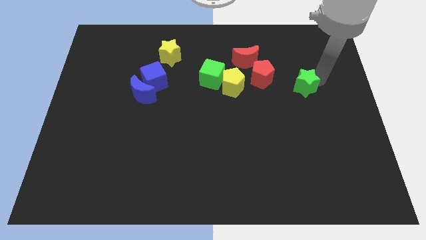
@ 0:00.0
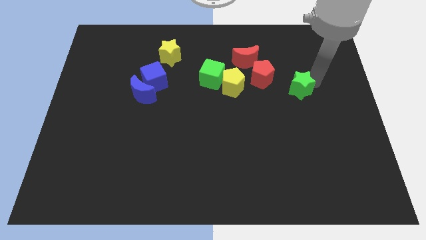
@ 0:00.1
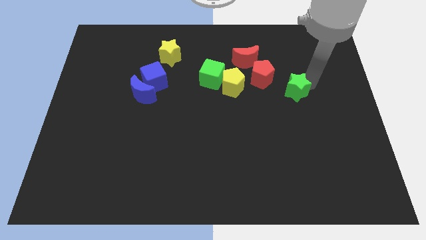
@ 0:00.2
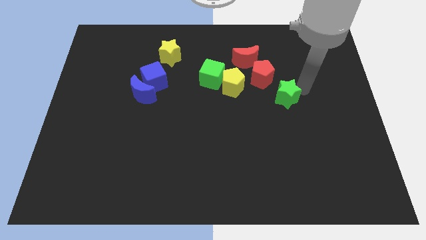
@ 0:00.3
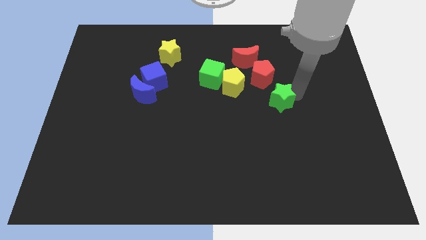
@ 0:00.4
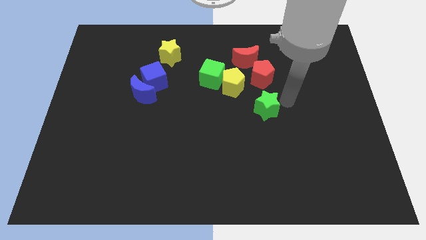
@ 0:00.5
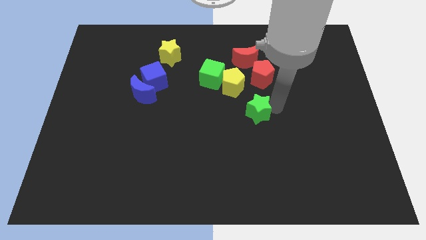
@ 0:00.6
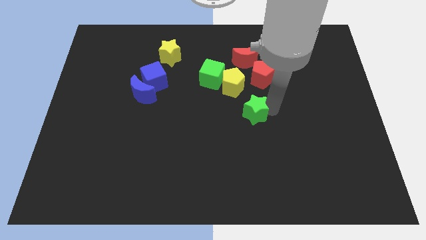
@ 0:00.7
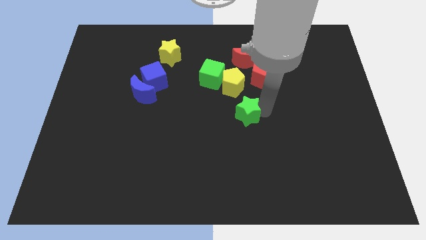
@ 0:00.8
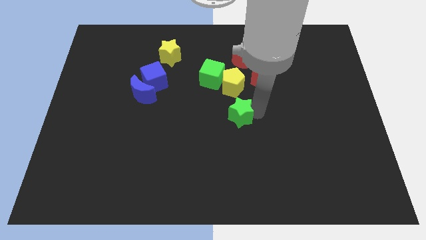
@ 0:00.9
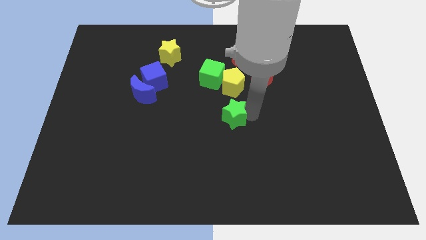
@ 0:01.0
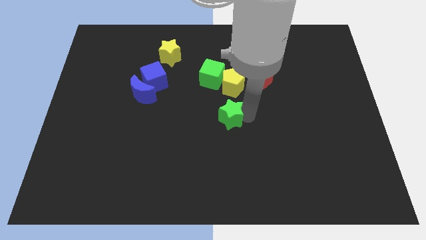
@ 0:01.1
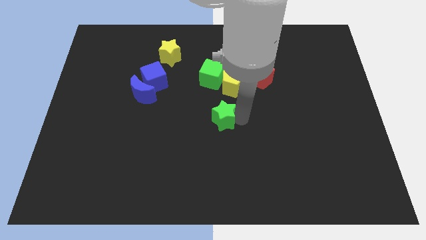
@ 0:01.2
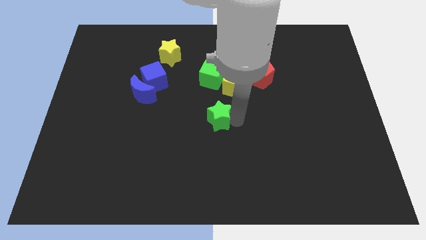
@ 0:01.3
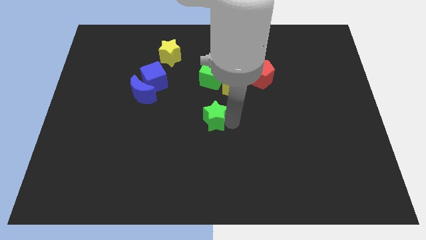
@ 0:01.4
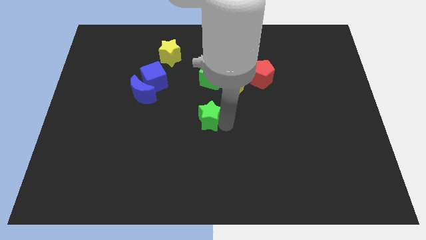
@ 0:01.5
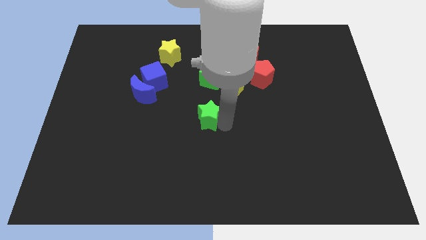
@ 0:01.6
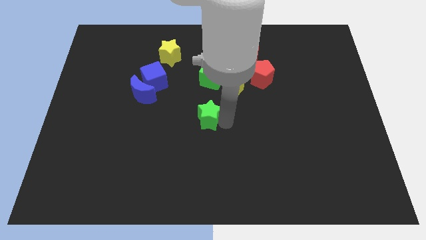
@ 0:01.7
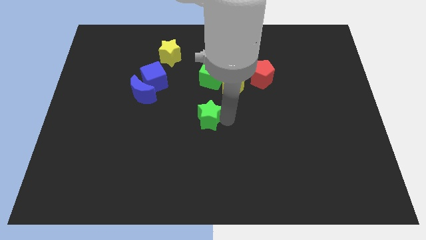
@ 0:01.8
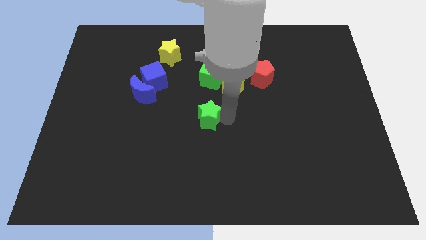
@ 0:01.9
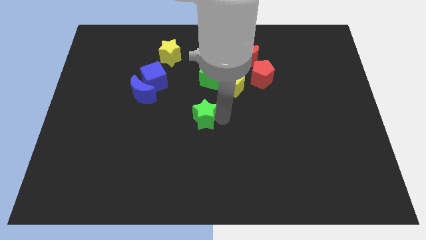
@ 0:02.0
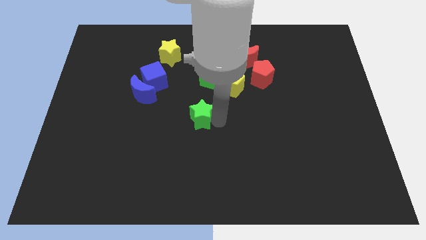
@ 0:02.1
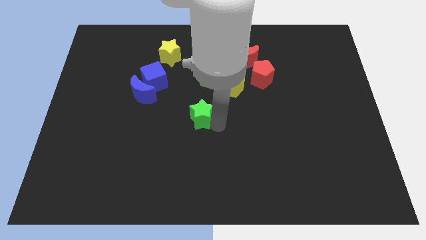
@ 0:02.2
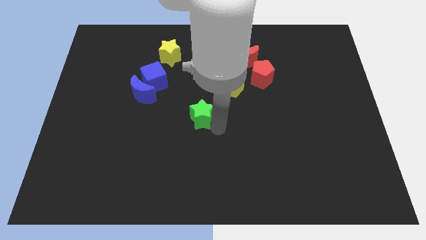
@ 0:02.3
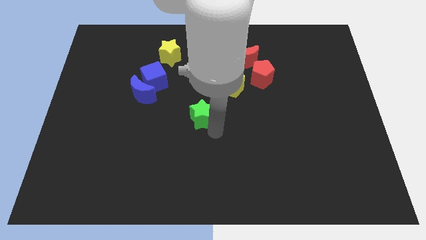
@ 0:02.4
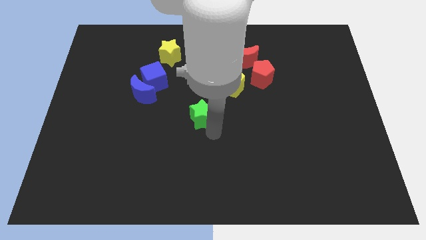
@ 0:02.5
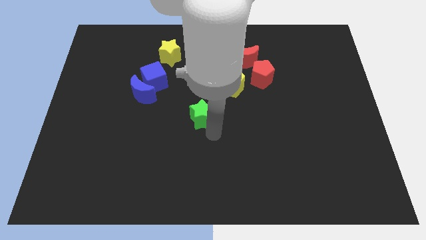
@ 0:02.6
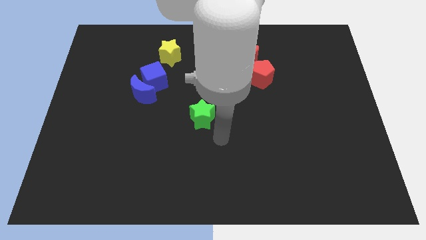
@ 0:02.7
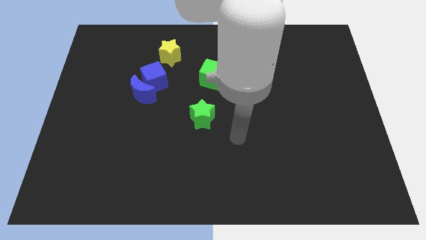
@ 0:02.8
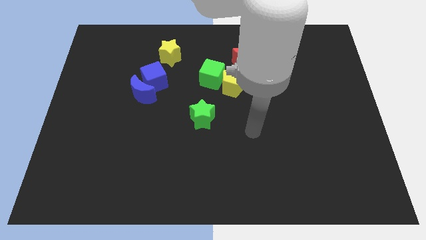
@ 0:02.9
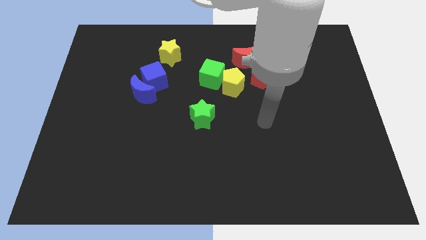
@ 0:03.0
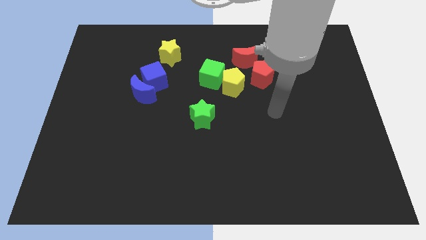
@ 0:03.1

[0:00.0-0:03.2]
place the green star diagonally to the yellow star

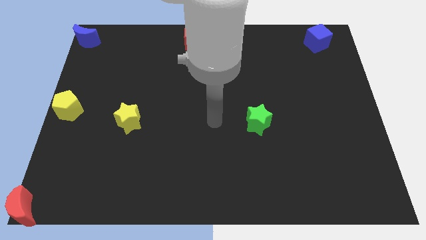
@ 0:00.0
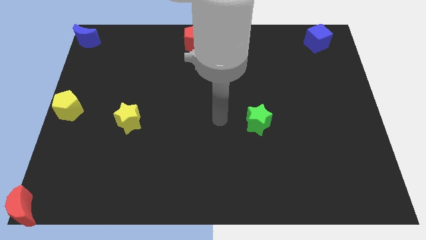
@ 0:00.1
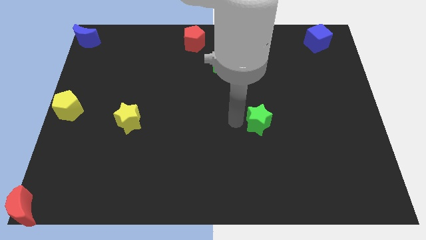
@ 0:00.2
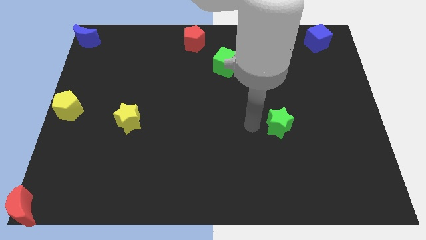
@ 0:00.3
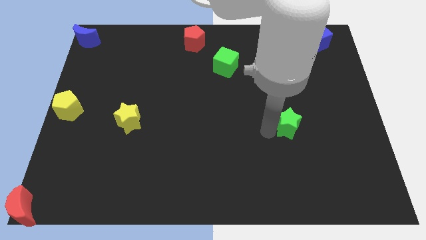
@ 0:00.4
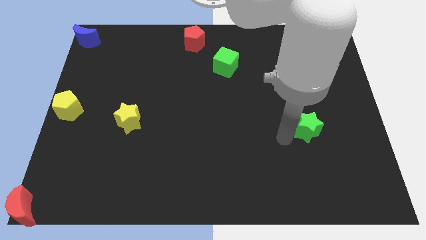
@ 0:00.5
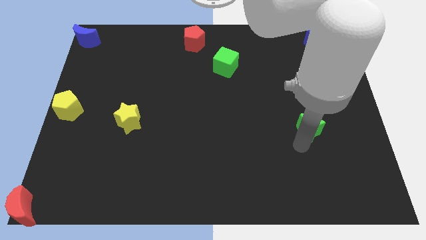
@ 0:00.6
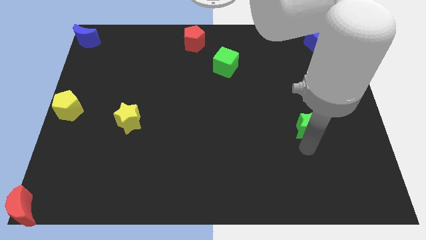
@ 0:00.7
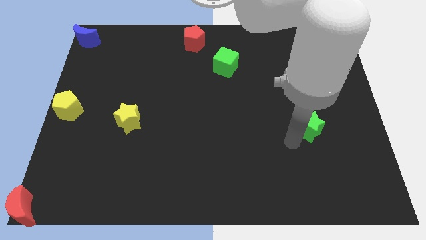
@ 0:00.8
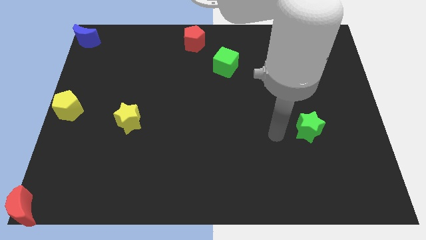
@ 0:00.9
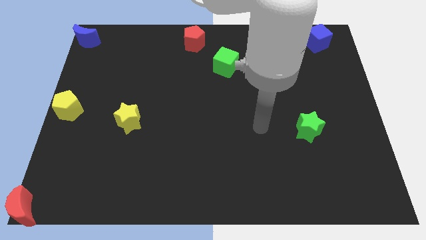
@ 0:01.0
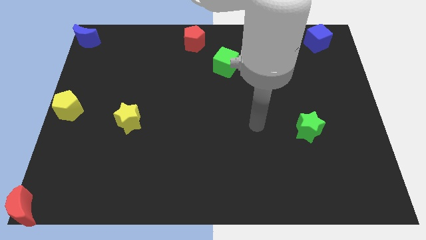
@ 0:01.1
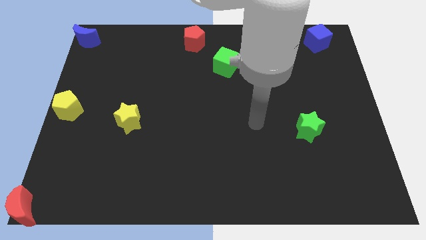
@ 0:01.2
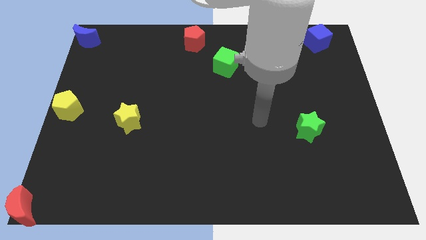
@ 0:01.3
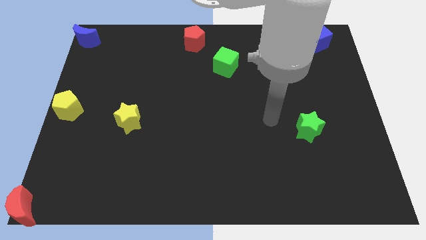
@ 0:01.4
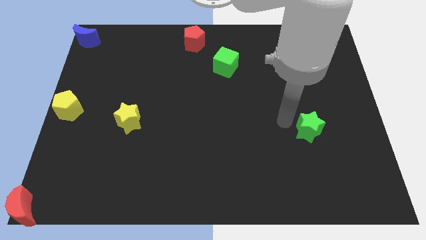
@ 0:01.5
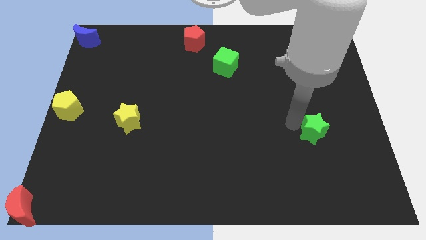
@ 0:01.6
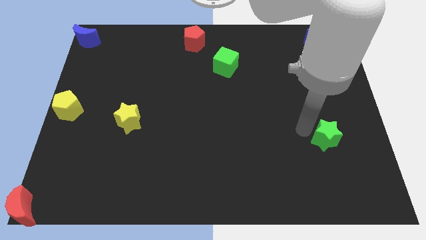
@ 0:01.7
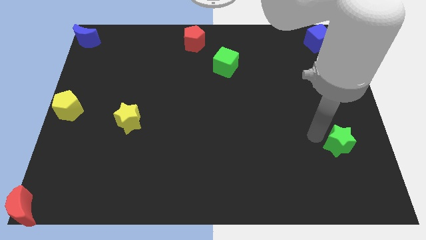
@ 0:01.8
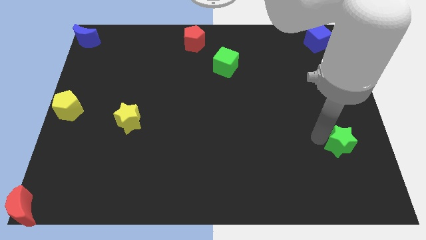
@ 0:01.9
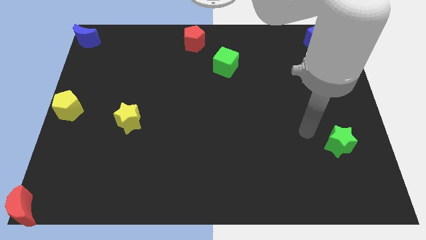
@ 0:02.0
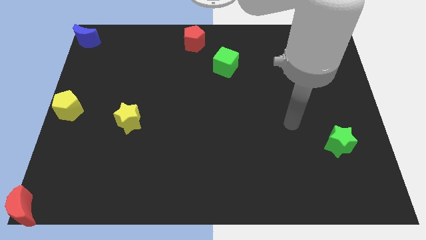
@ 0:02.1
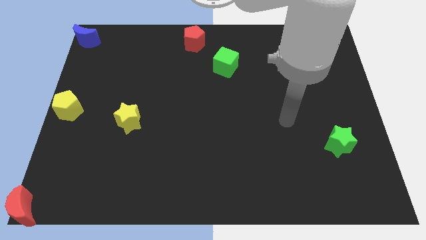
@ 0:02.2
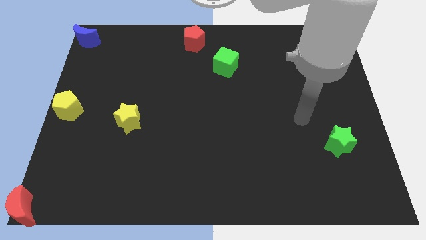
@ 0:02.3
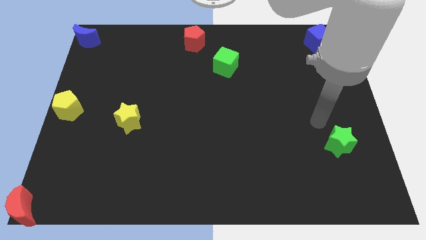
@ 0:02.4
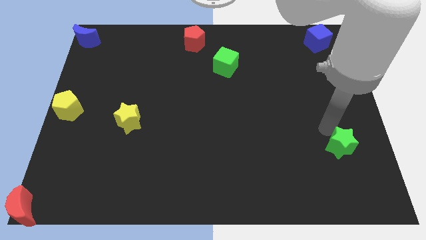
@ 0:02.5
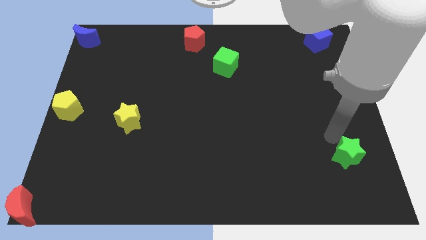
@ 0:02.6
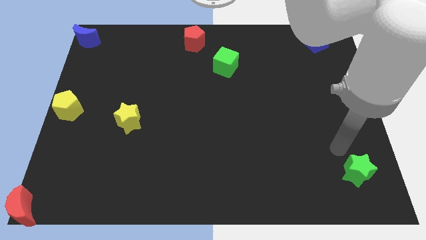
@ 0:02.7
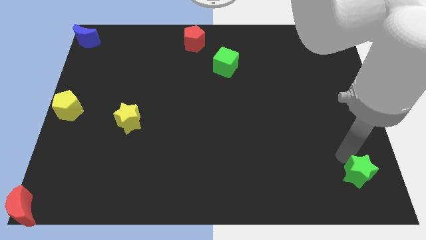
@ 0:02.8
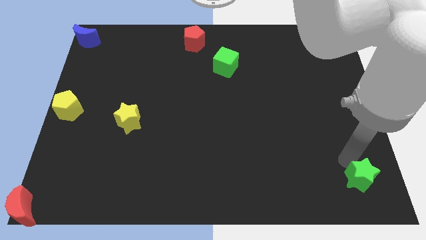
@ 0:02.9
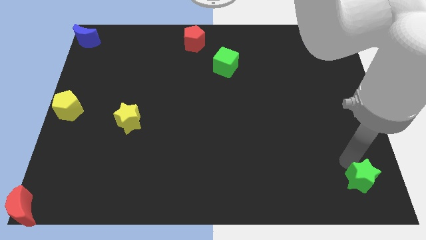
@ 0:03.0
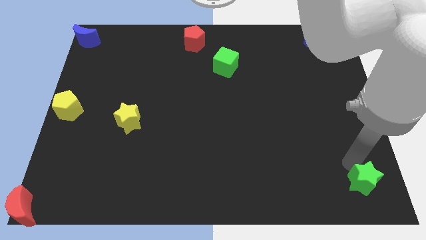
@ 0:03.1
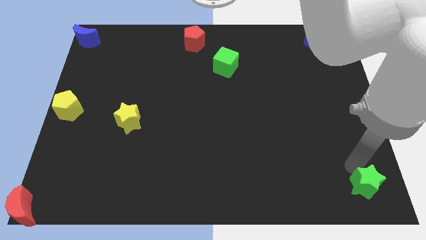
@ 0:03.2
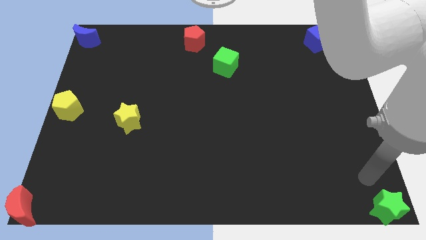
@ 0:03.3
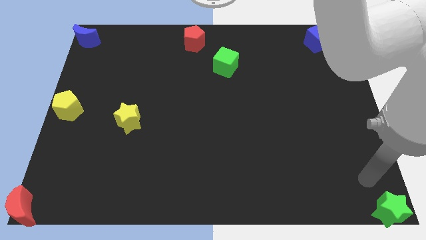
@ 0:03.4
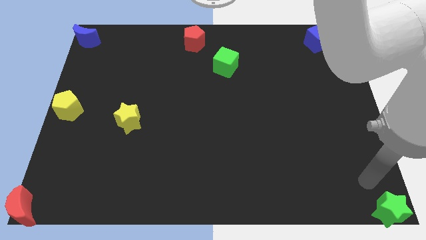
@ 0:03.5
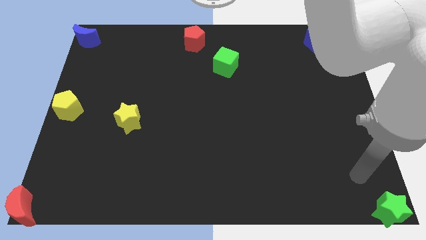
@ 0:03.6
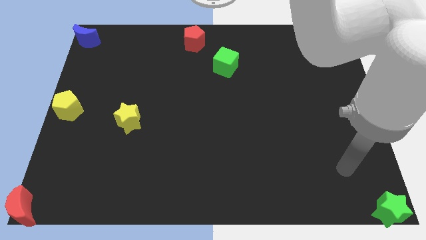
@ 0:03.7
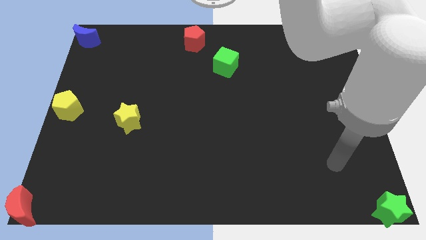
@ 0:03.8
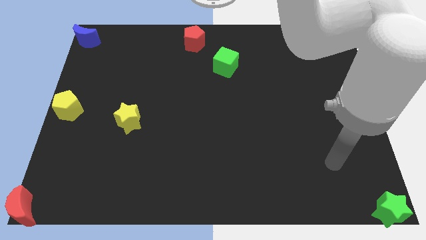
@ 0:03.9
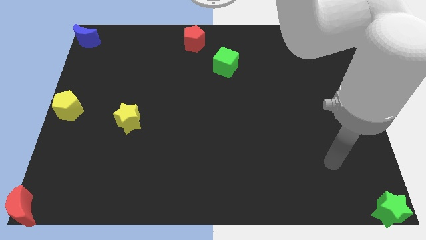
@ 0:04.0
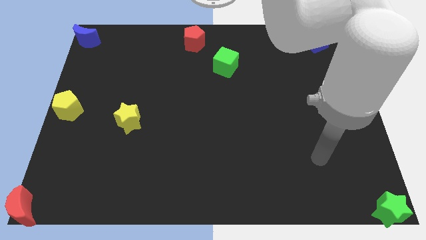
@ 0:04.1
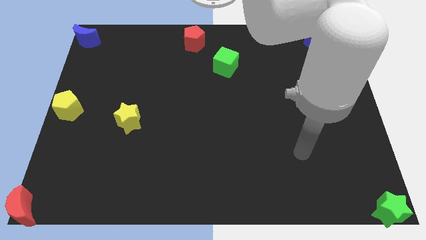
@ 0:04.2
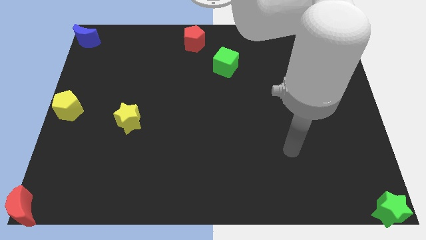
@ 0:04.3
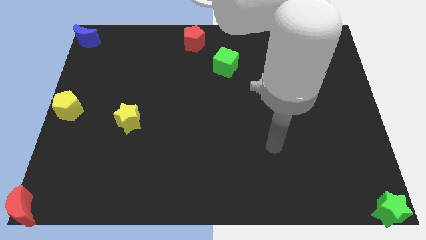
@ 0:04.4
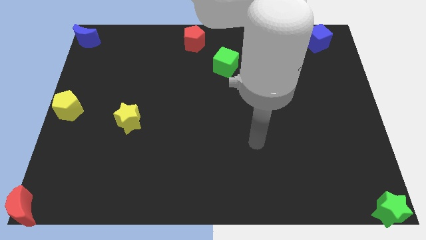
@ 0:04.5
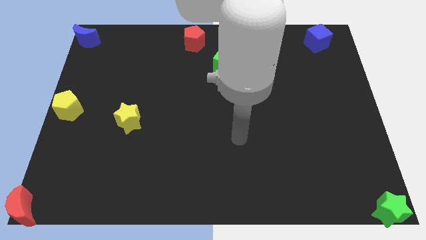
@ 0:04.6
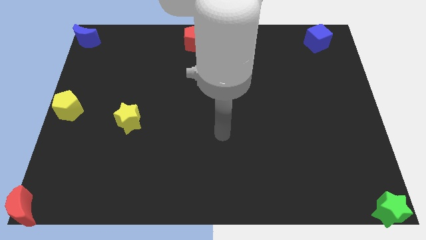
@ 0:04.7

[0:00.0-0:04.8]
push the green star to the bottom right corner of the board

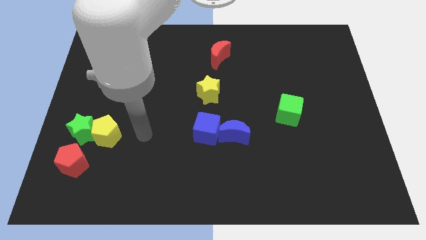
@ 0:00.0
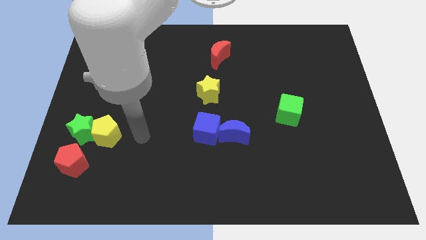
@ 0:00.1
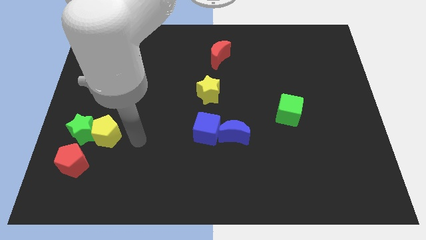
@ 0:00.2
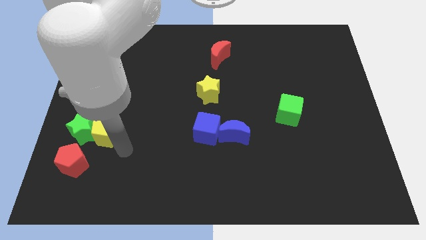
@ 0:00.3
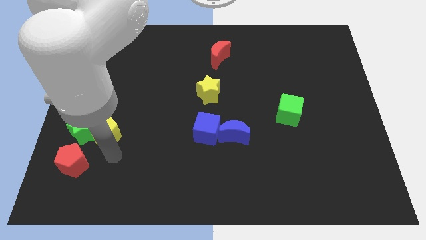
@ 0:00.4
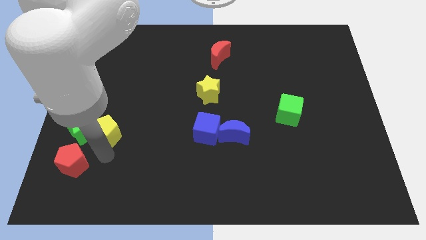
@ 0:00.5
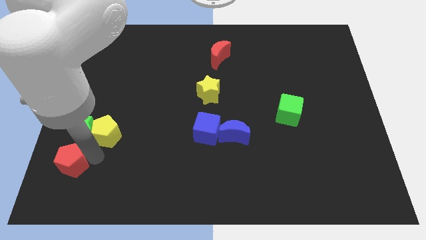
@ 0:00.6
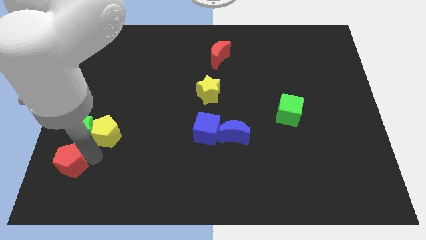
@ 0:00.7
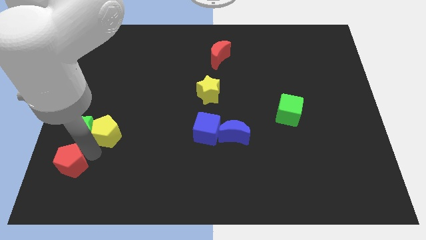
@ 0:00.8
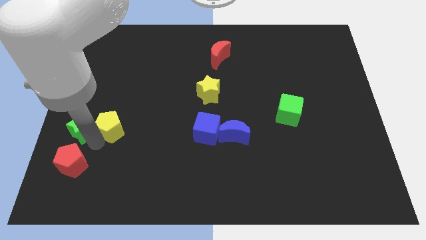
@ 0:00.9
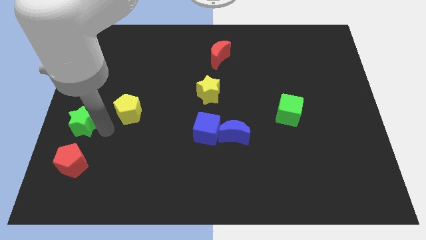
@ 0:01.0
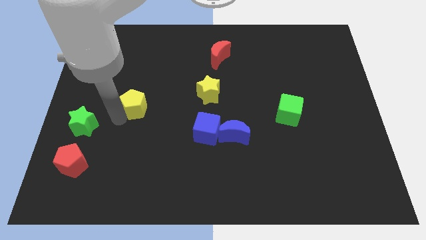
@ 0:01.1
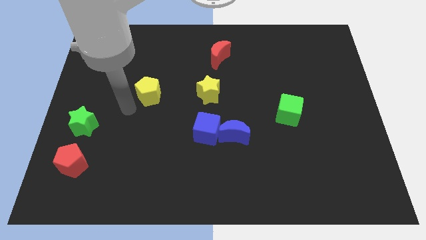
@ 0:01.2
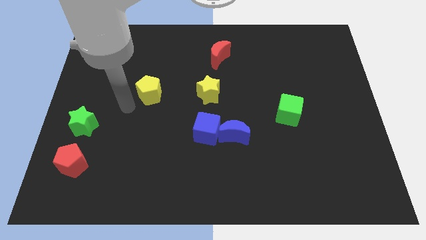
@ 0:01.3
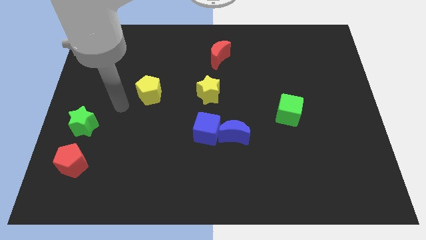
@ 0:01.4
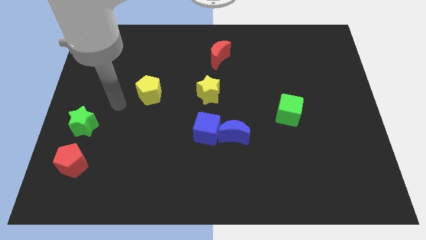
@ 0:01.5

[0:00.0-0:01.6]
place the yellow pentagon to the left of yellow star
